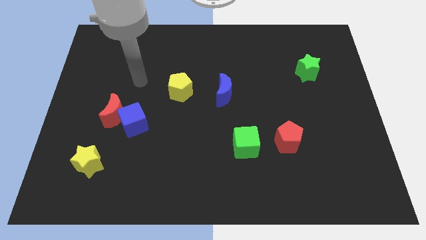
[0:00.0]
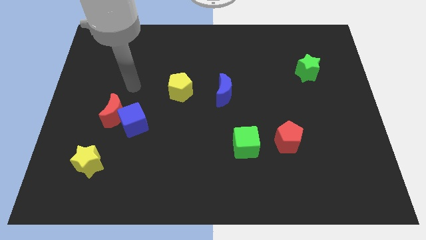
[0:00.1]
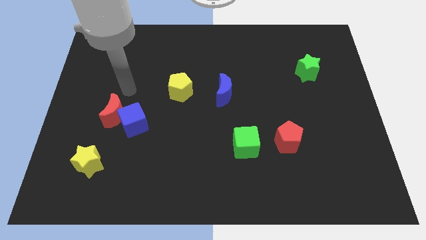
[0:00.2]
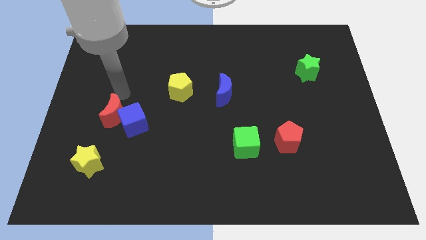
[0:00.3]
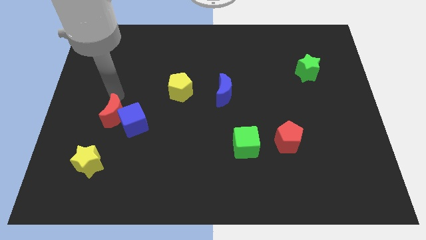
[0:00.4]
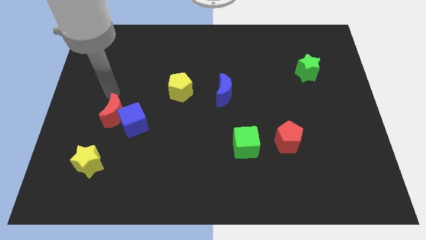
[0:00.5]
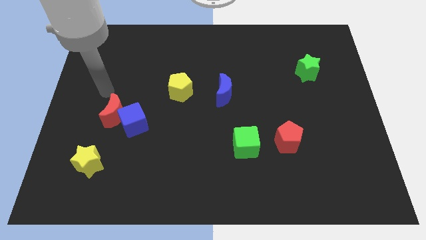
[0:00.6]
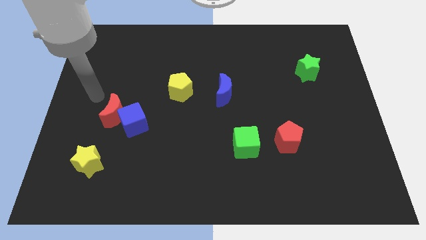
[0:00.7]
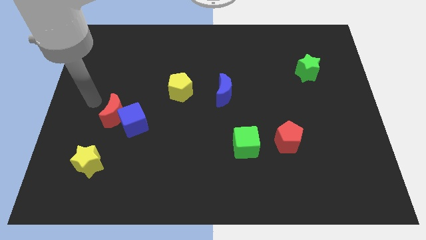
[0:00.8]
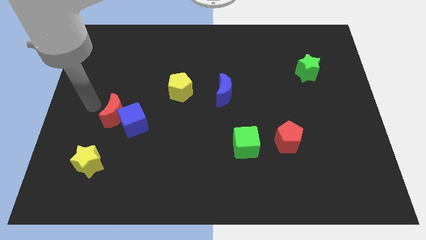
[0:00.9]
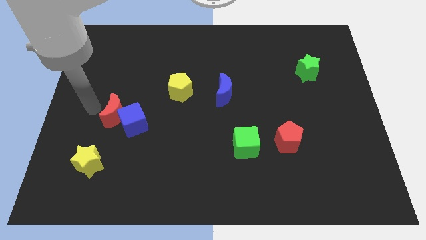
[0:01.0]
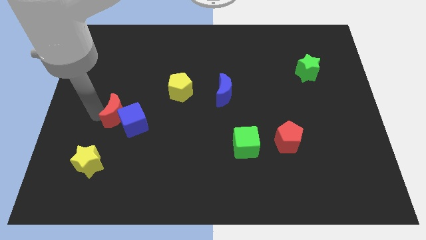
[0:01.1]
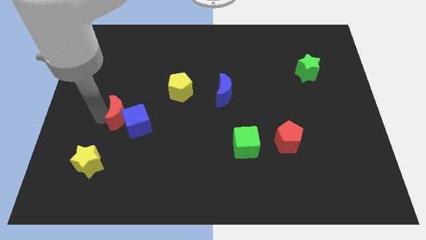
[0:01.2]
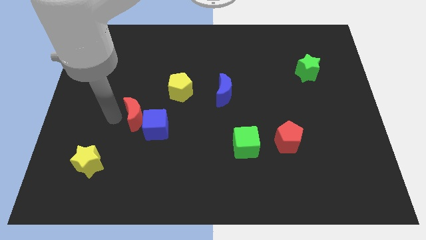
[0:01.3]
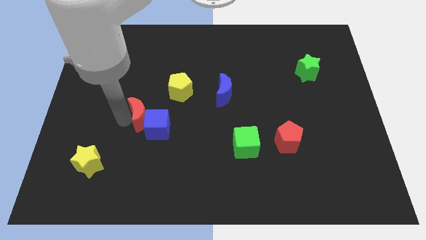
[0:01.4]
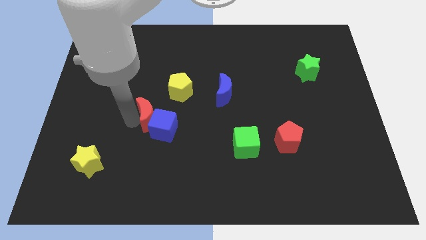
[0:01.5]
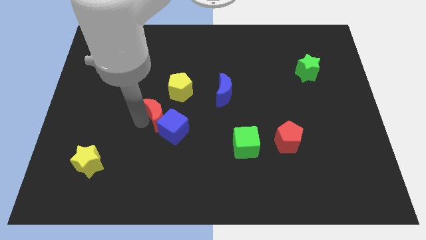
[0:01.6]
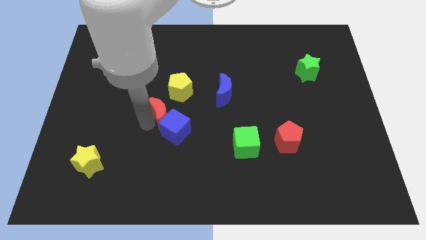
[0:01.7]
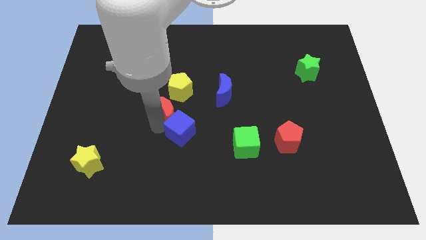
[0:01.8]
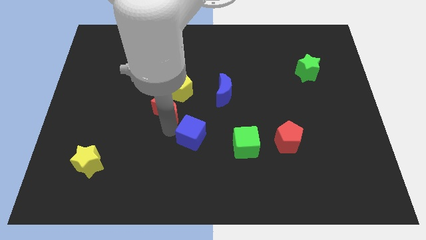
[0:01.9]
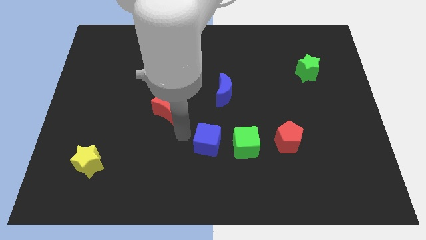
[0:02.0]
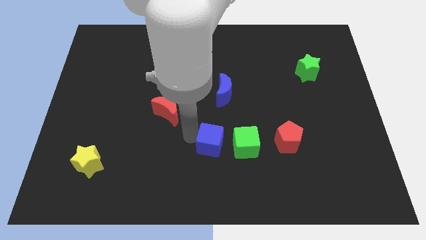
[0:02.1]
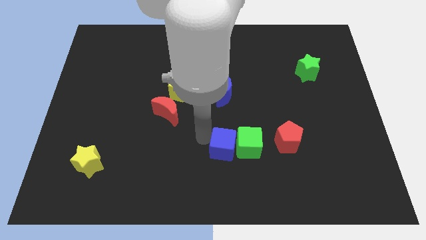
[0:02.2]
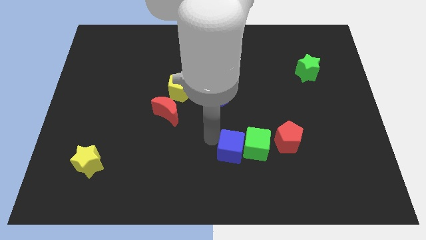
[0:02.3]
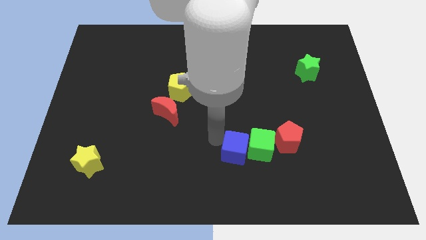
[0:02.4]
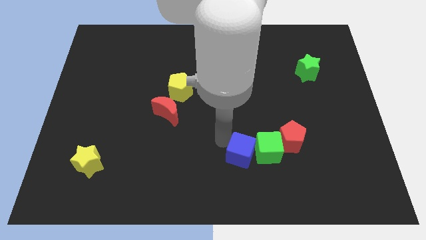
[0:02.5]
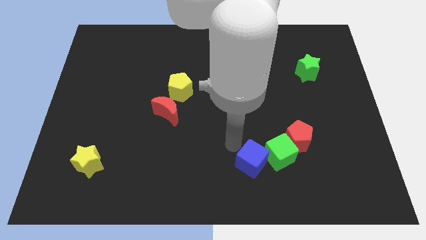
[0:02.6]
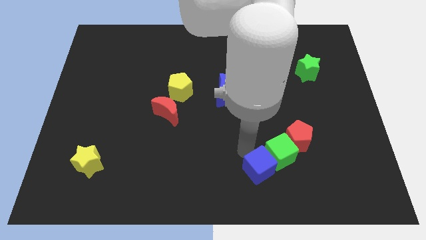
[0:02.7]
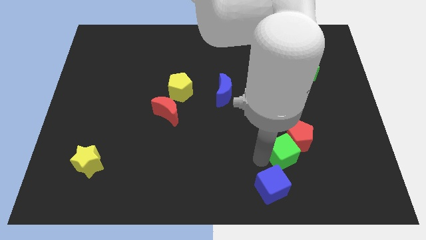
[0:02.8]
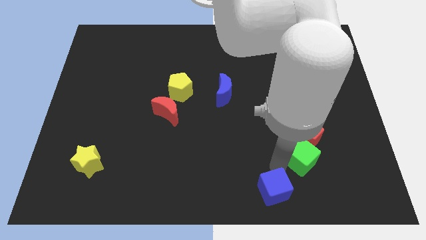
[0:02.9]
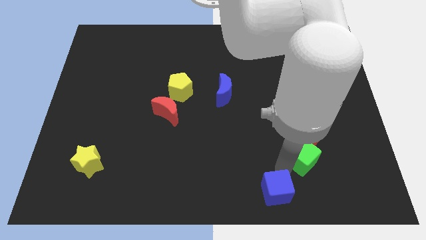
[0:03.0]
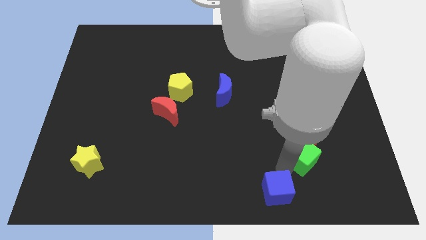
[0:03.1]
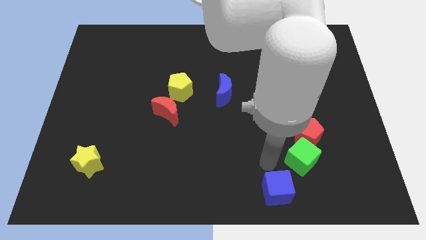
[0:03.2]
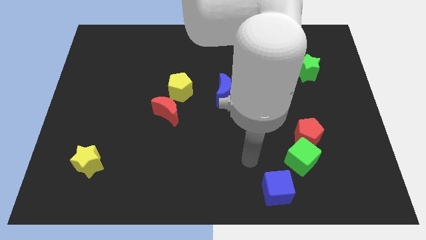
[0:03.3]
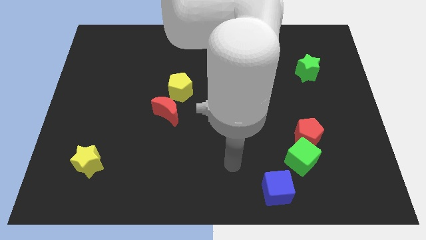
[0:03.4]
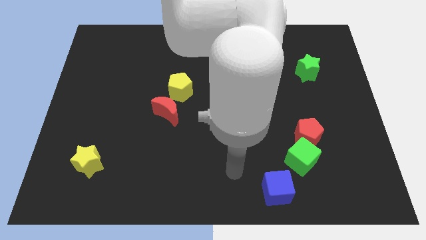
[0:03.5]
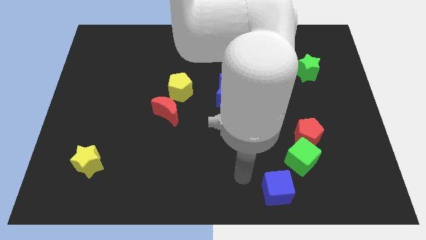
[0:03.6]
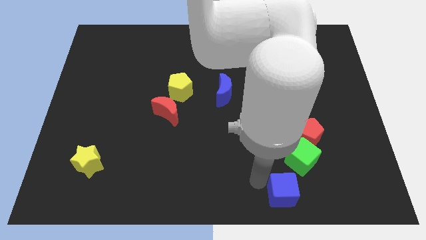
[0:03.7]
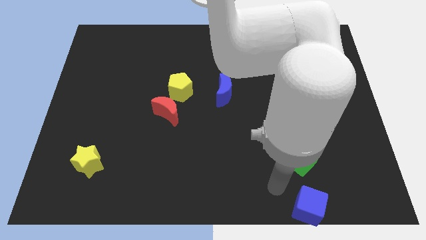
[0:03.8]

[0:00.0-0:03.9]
move the blue cube and green cube to the bottom side of the red pentagon

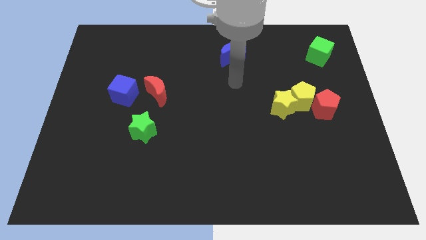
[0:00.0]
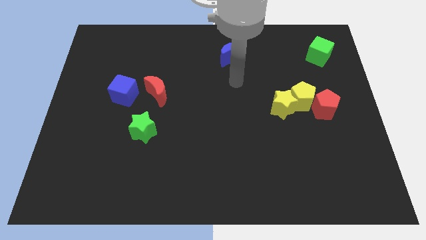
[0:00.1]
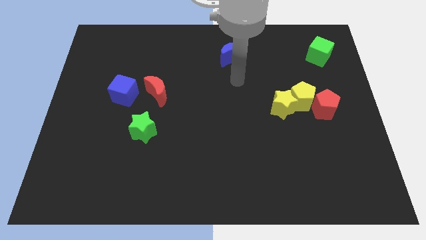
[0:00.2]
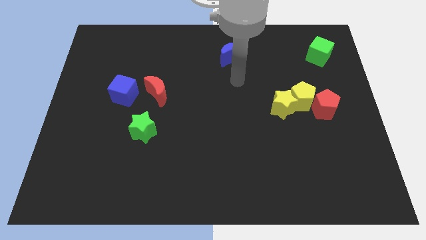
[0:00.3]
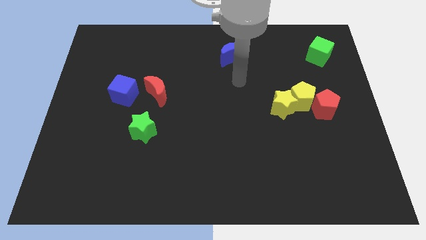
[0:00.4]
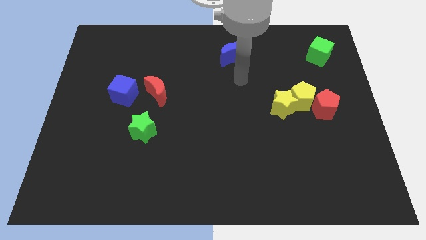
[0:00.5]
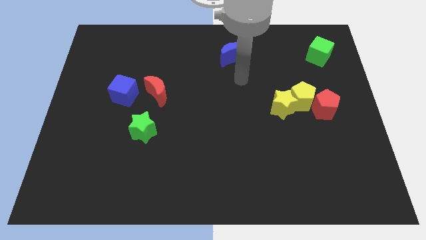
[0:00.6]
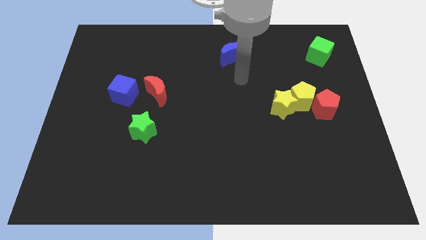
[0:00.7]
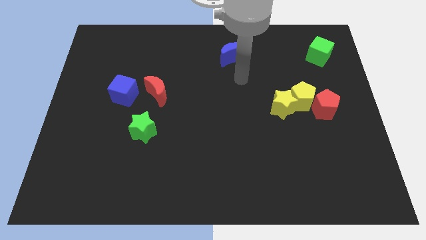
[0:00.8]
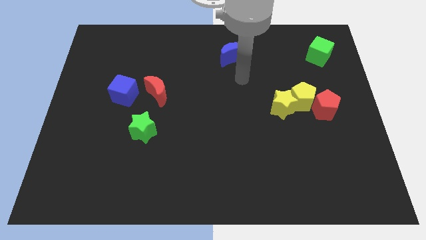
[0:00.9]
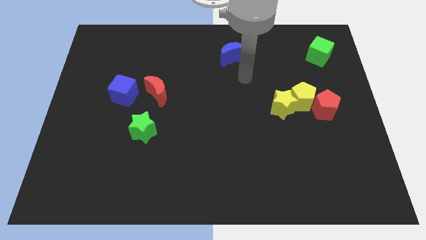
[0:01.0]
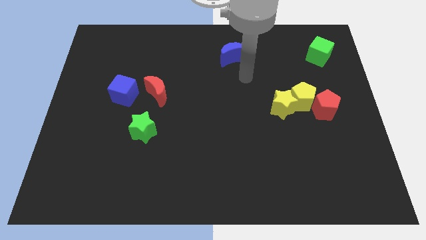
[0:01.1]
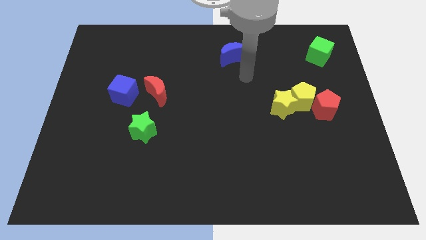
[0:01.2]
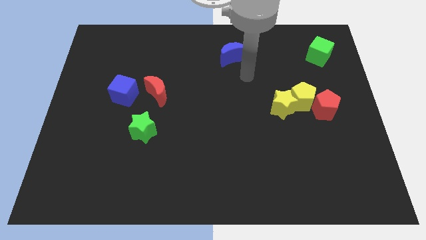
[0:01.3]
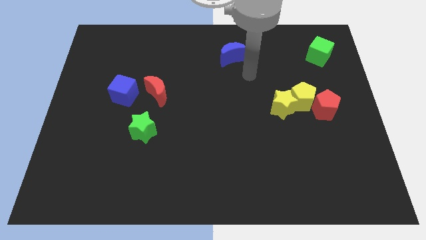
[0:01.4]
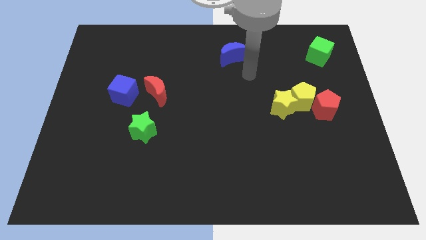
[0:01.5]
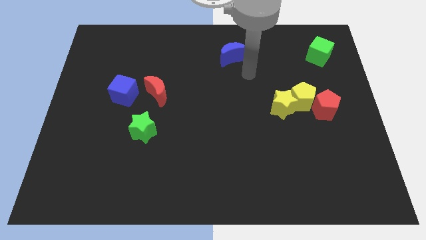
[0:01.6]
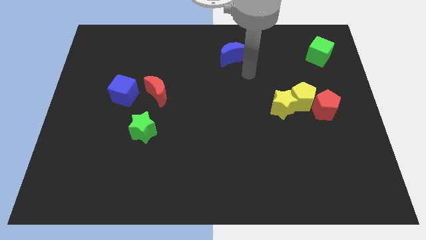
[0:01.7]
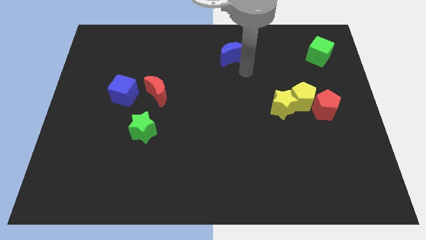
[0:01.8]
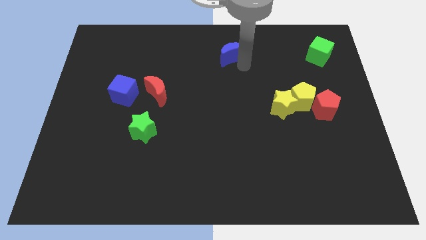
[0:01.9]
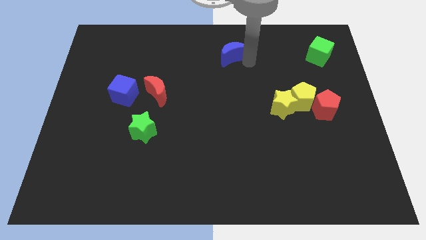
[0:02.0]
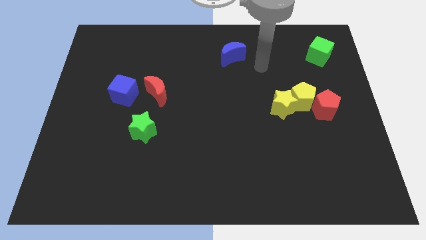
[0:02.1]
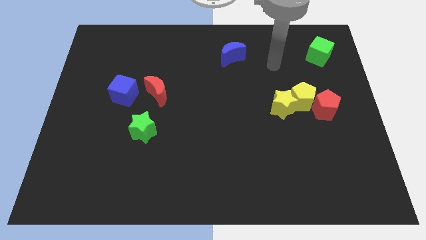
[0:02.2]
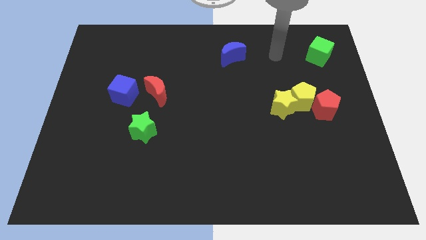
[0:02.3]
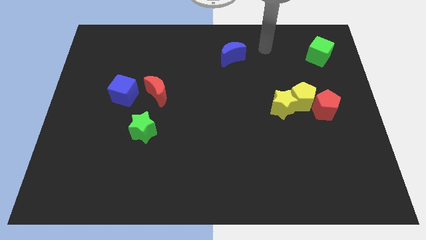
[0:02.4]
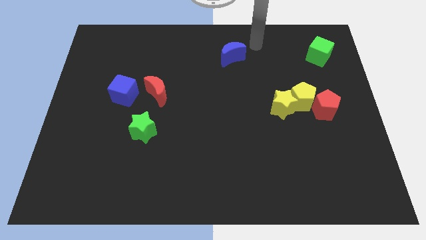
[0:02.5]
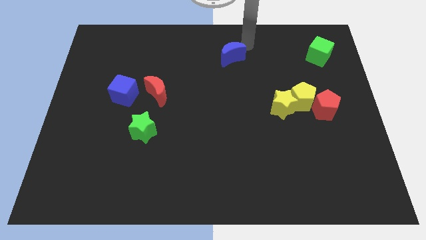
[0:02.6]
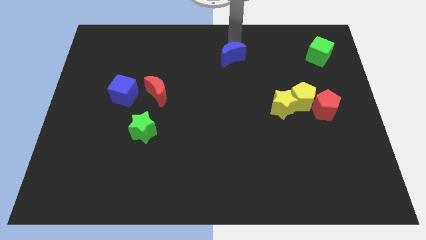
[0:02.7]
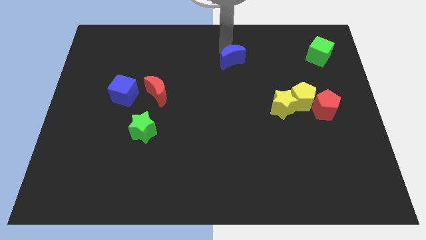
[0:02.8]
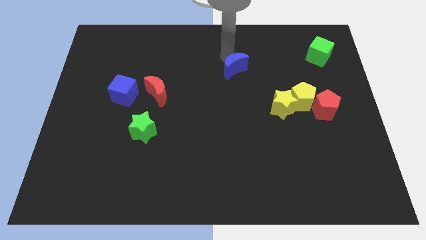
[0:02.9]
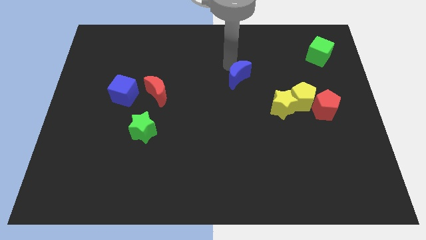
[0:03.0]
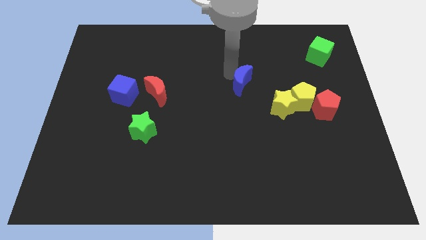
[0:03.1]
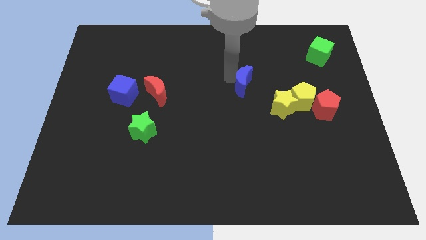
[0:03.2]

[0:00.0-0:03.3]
place the blue moon to the center

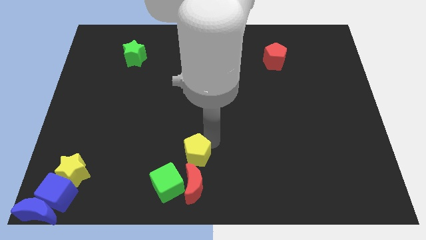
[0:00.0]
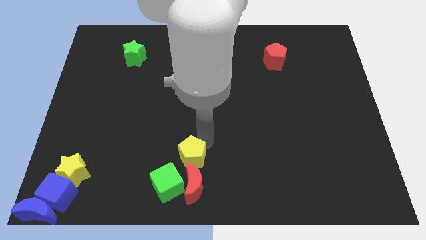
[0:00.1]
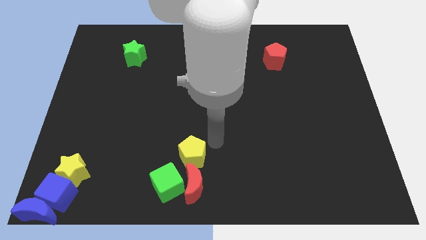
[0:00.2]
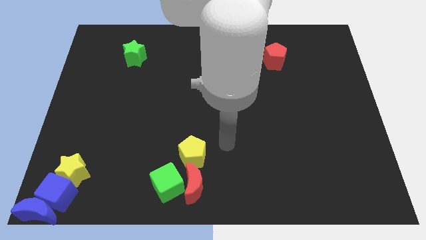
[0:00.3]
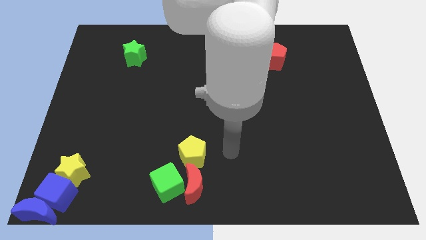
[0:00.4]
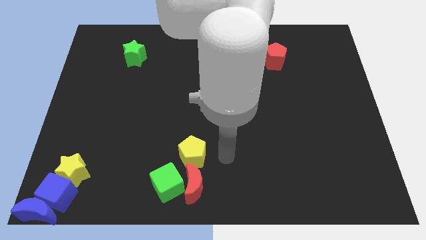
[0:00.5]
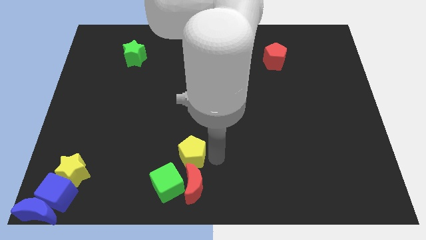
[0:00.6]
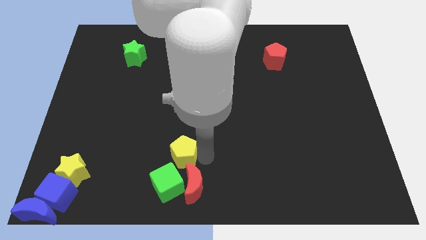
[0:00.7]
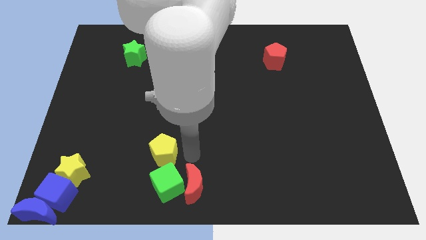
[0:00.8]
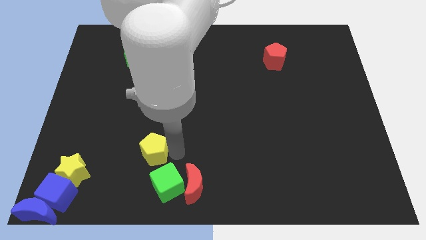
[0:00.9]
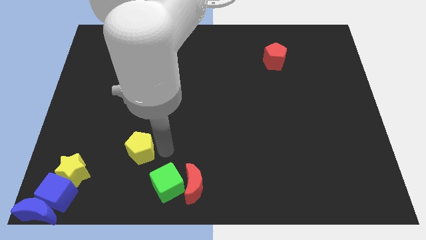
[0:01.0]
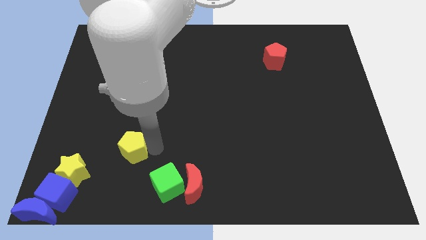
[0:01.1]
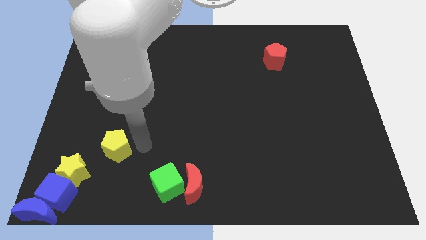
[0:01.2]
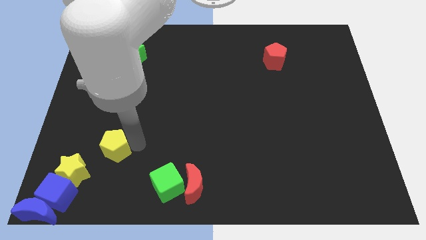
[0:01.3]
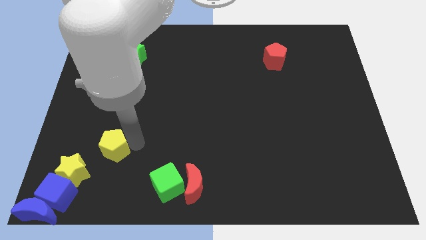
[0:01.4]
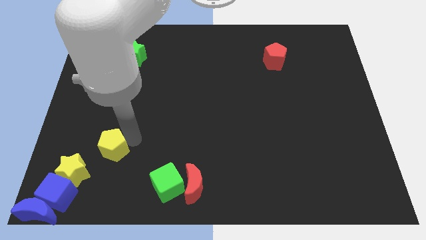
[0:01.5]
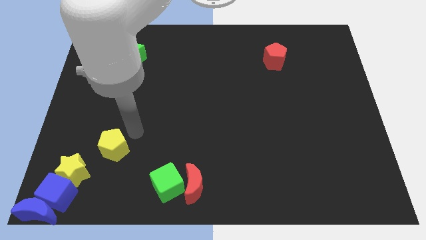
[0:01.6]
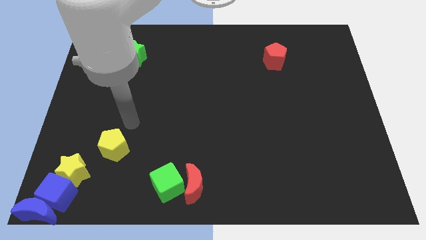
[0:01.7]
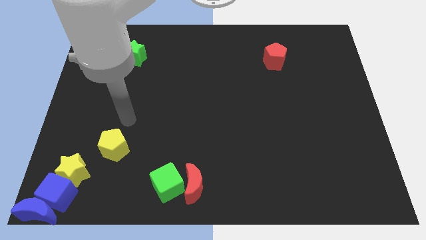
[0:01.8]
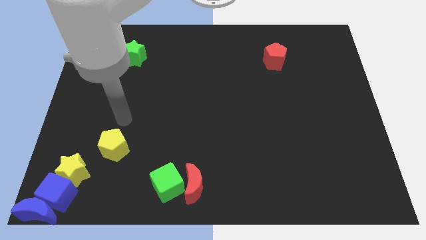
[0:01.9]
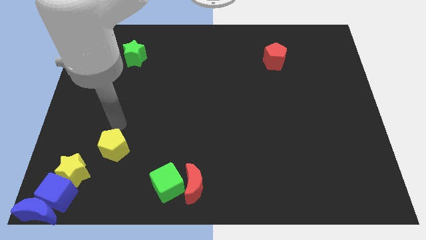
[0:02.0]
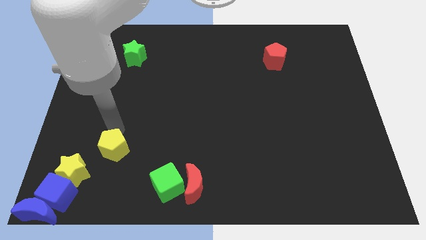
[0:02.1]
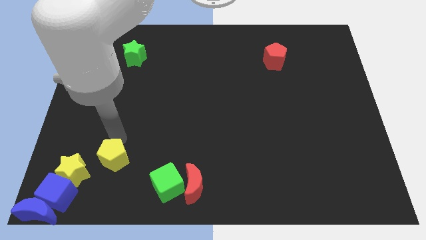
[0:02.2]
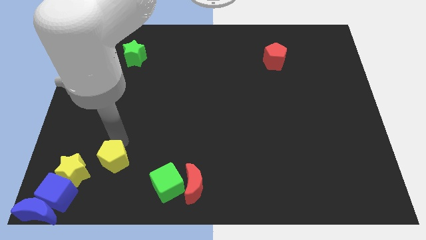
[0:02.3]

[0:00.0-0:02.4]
drag the yellow pentagon towards the yellow star
